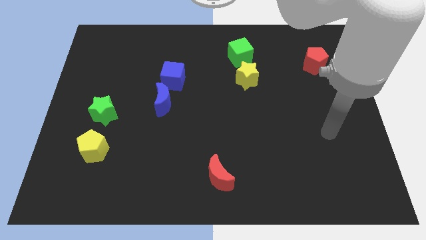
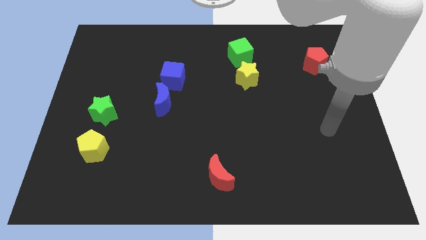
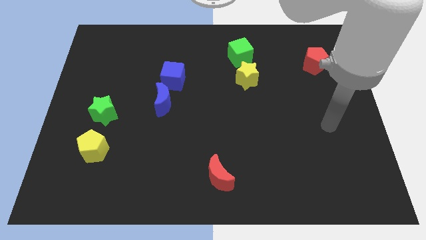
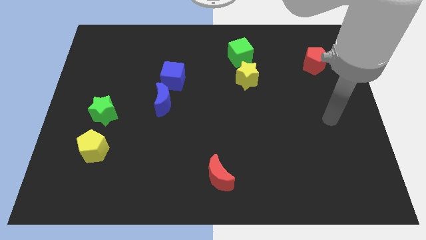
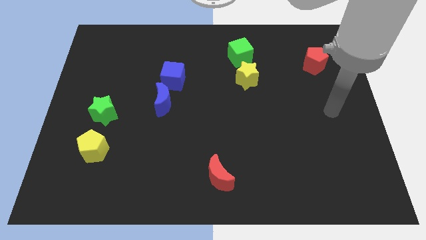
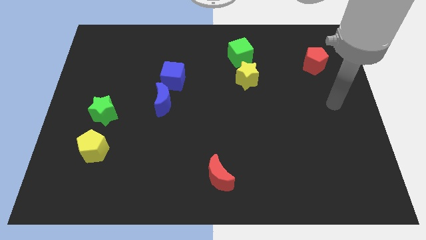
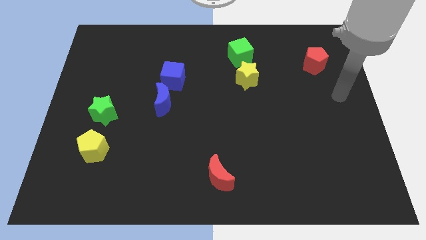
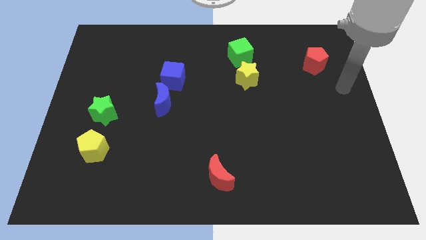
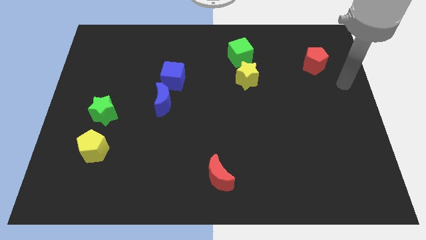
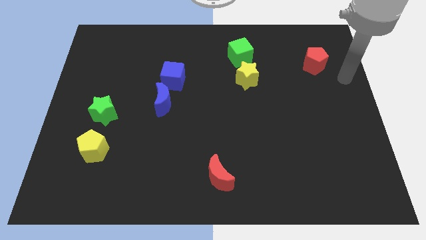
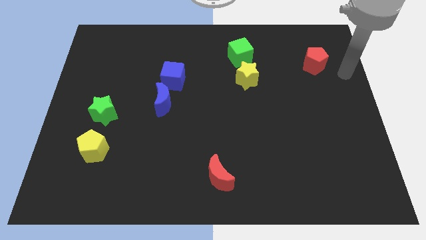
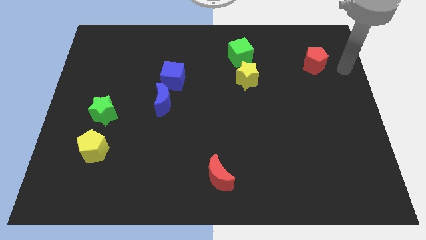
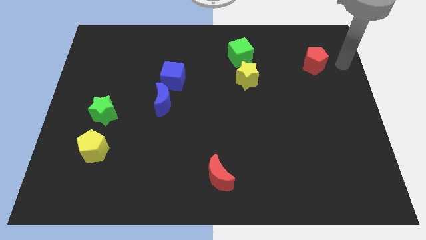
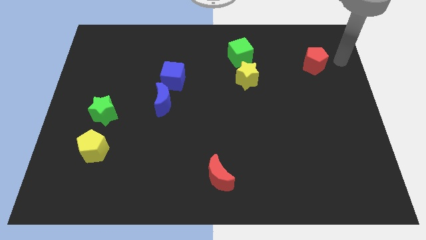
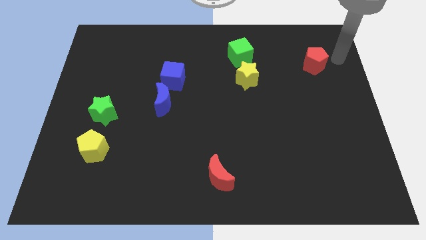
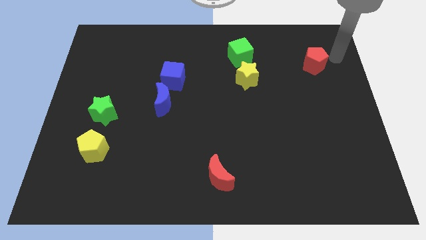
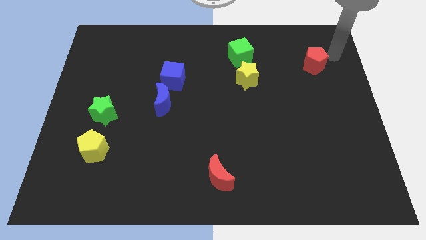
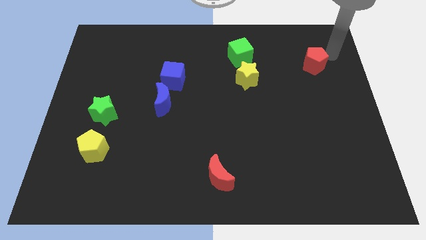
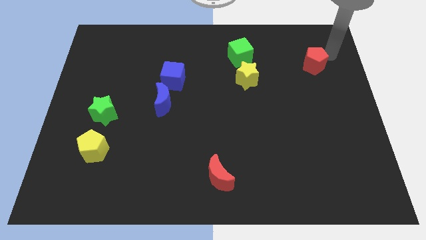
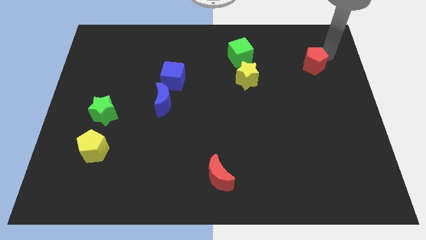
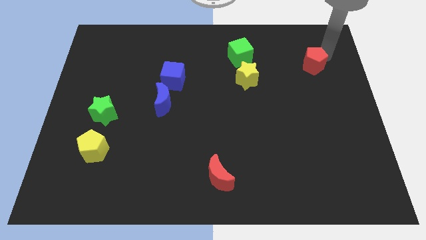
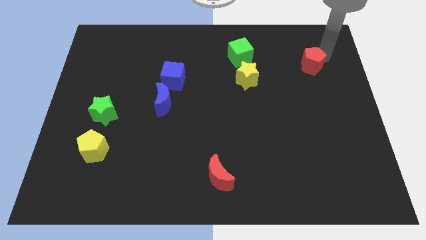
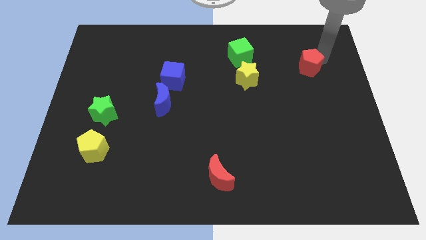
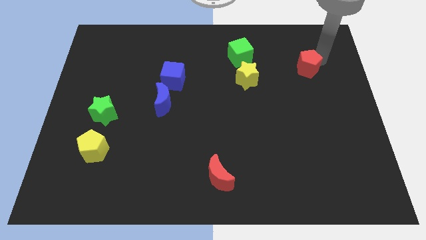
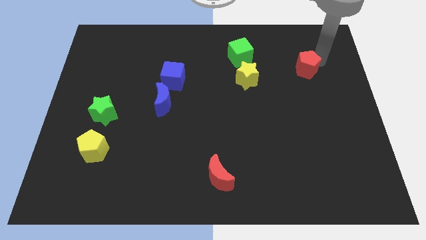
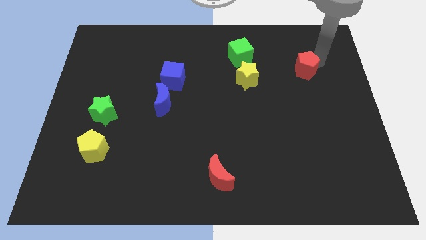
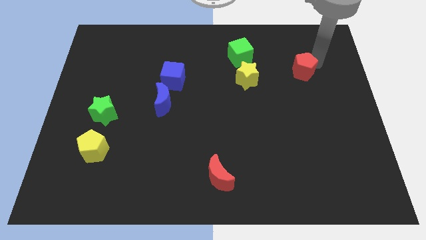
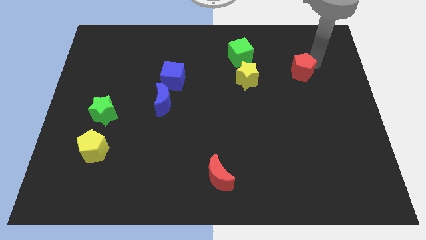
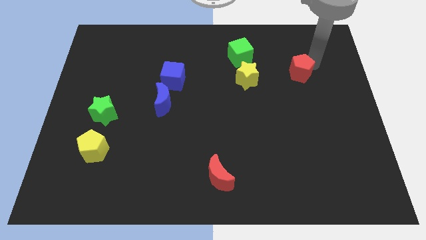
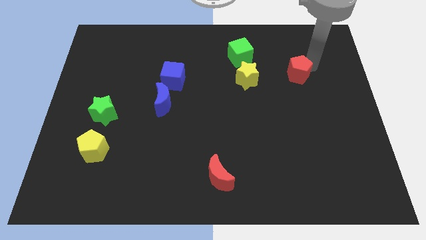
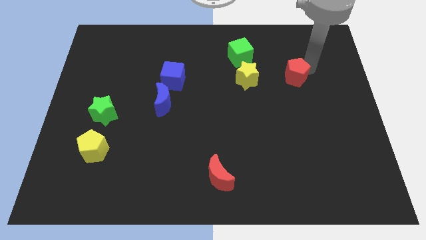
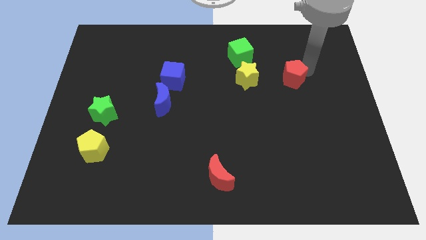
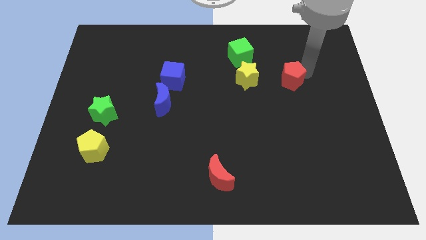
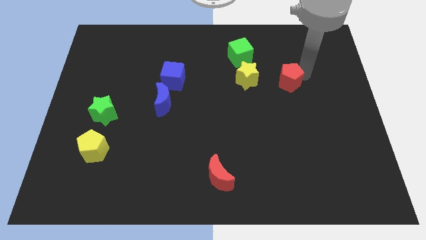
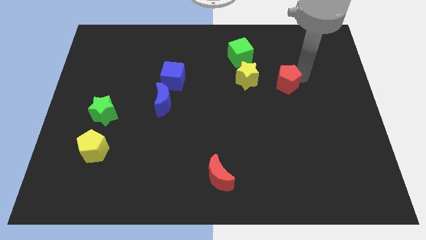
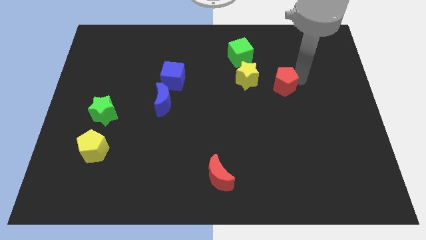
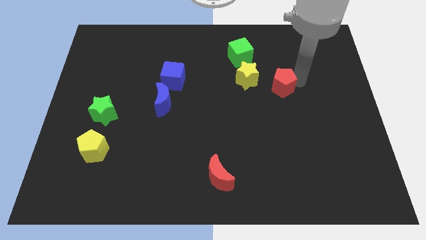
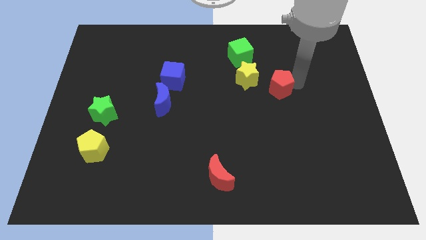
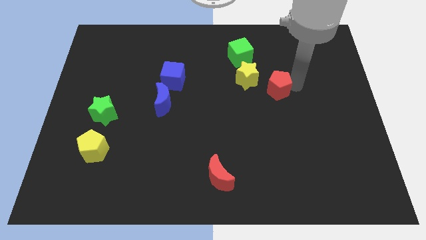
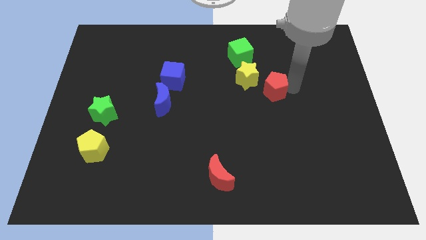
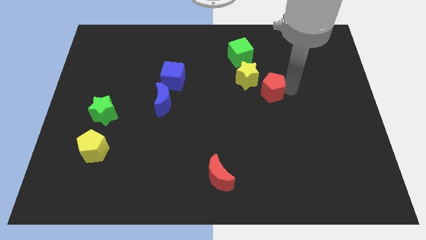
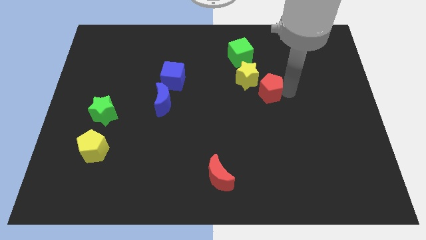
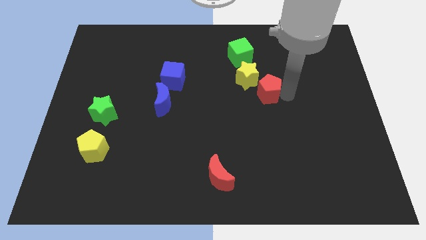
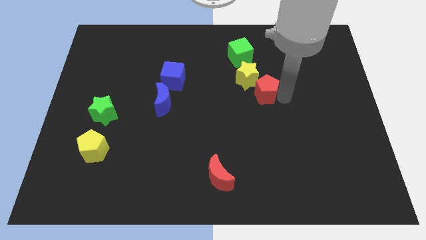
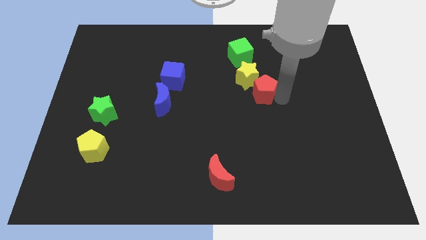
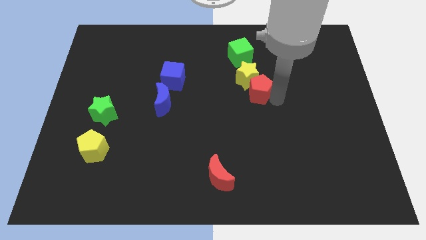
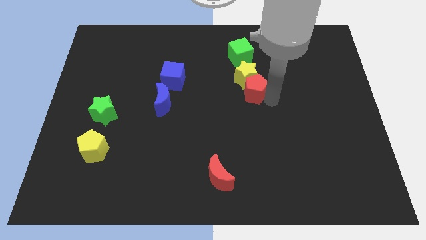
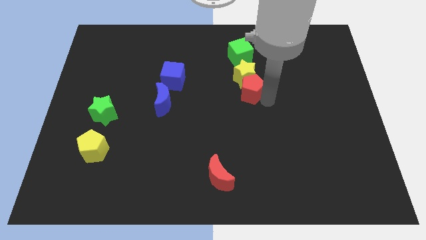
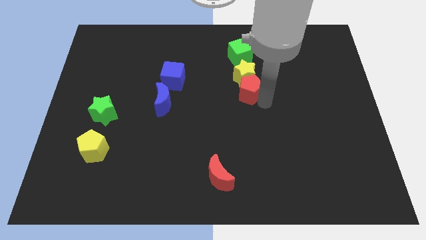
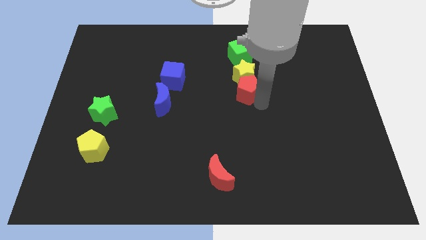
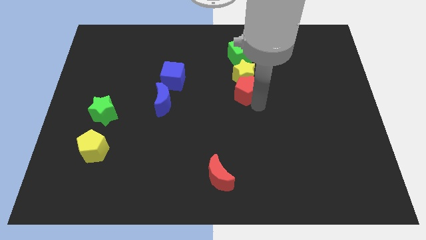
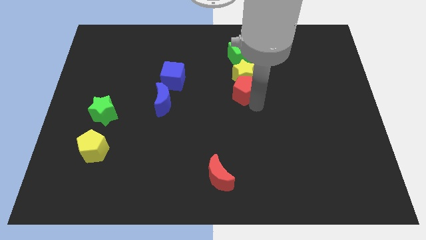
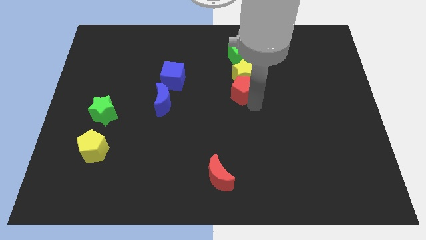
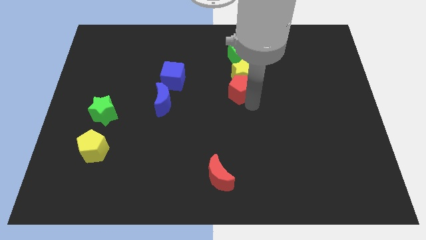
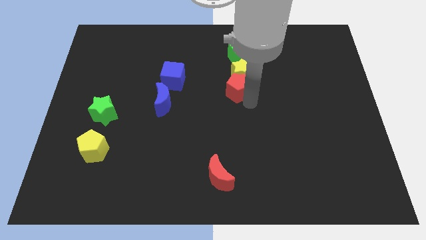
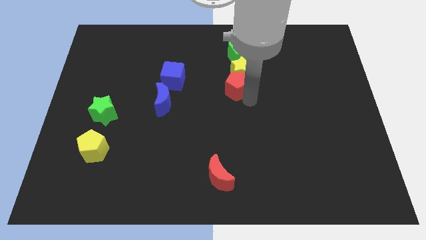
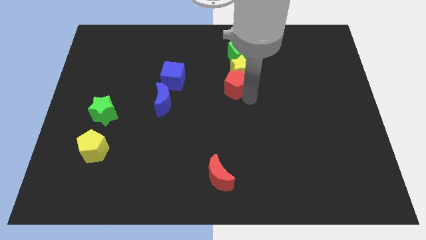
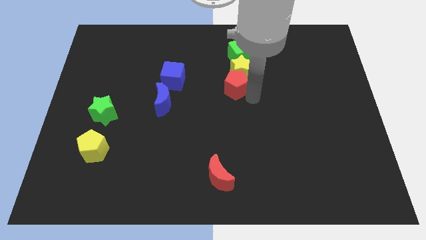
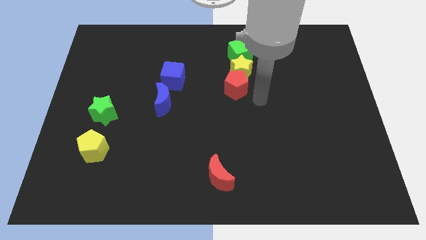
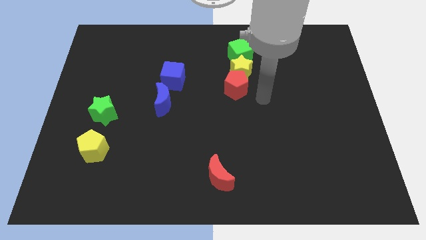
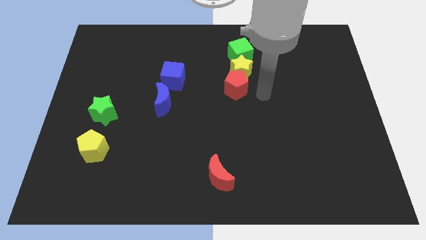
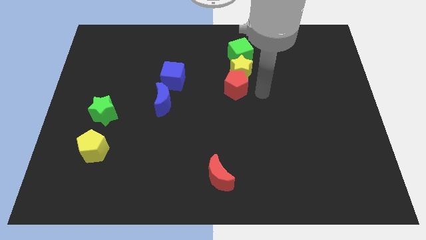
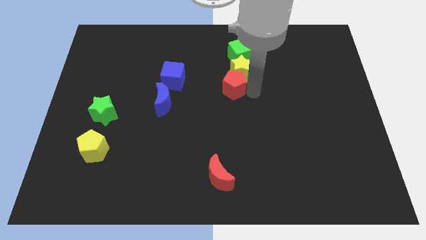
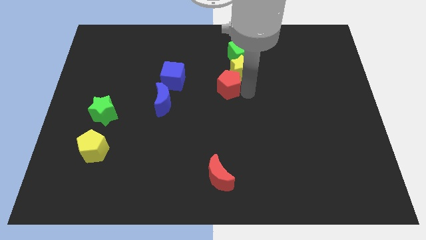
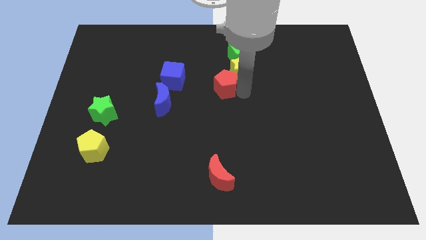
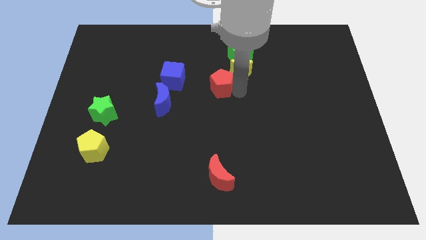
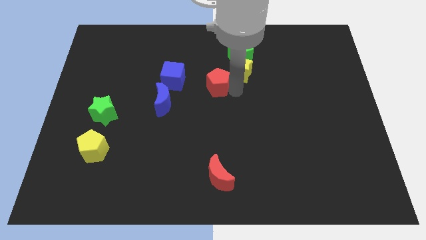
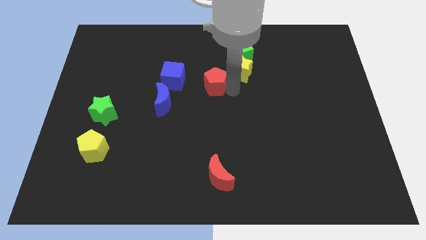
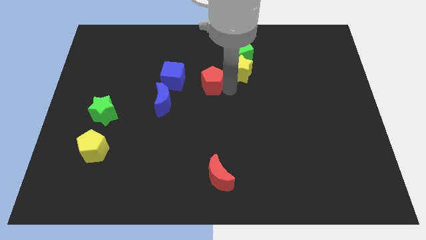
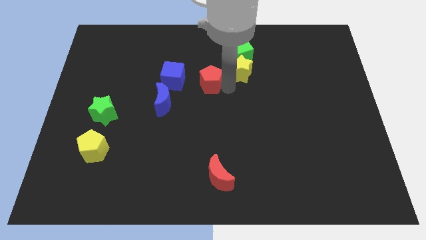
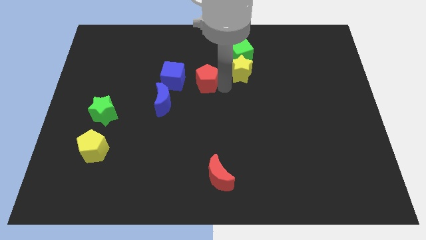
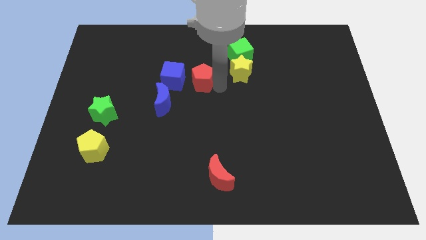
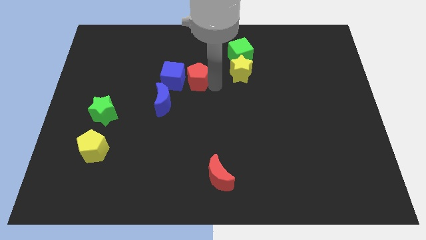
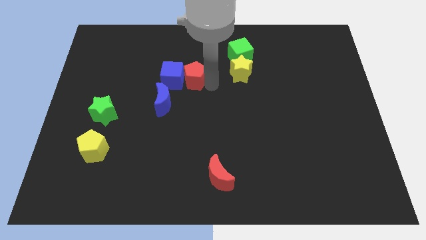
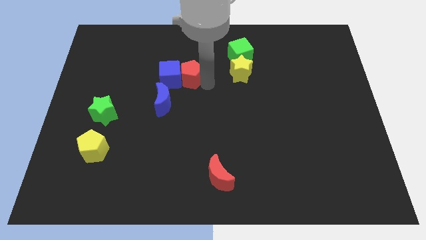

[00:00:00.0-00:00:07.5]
push the red pentagon close to the blue cube

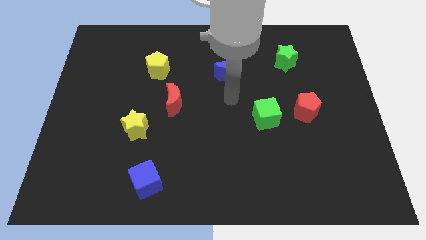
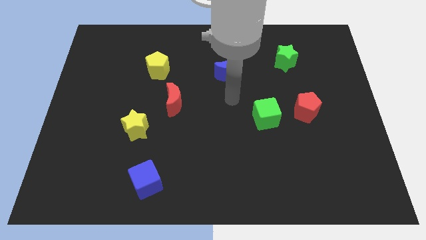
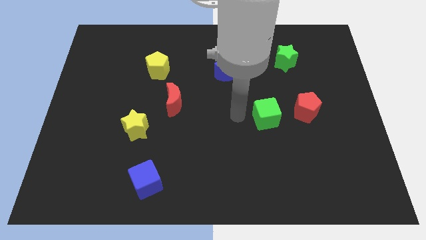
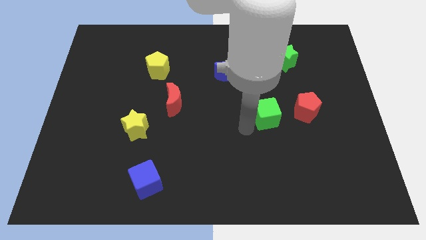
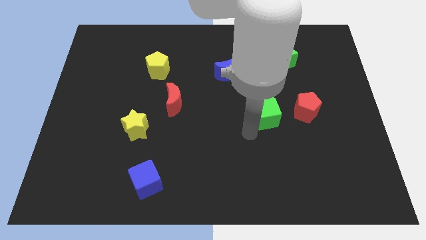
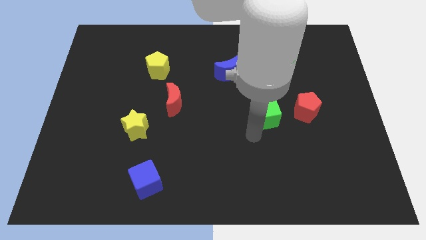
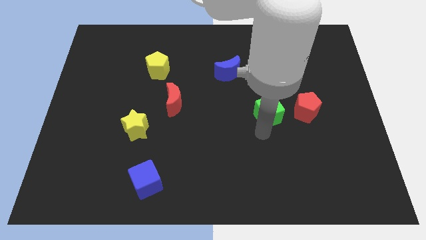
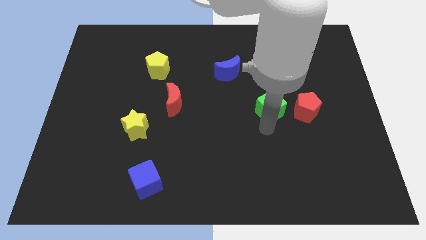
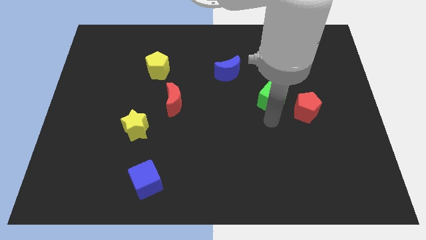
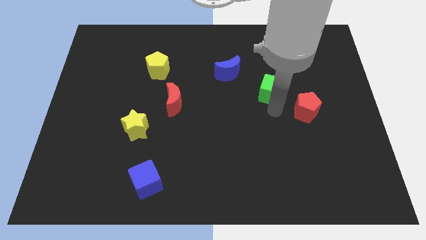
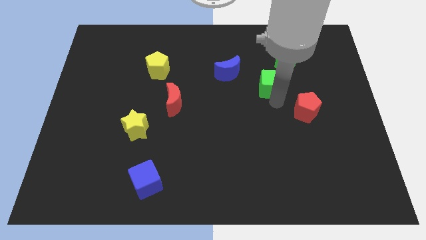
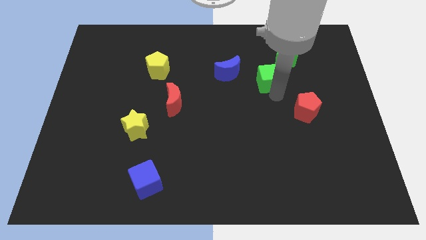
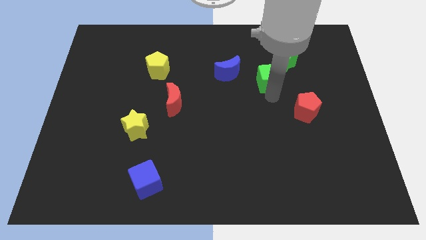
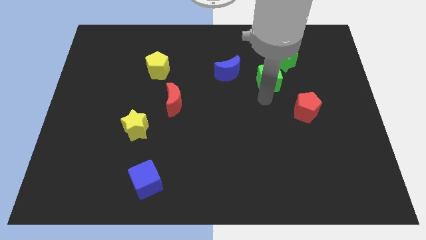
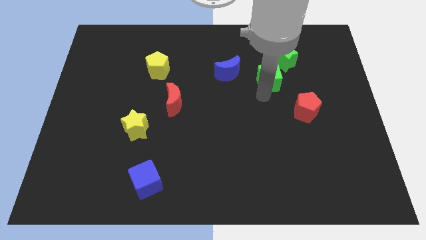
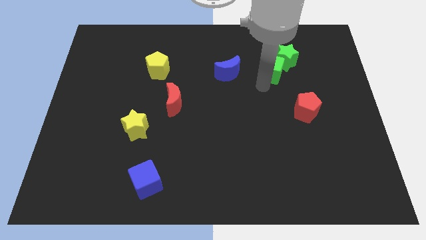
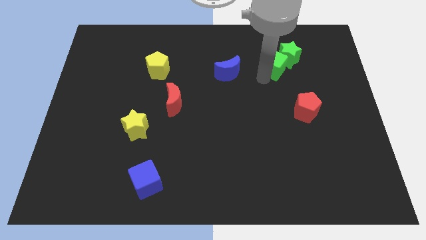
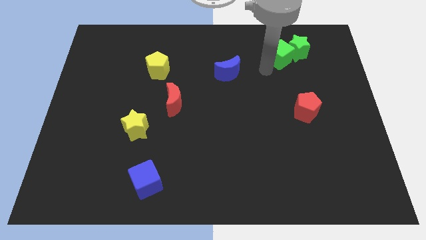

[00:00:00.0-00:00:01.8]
move the green cube towards the green star
